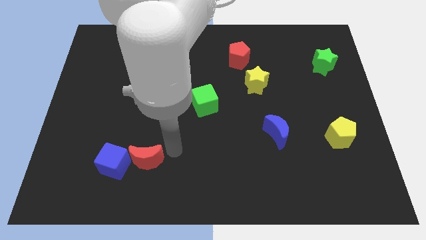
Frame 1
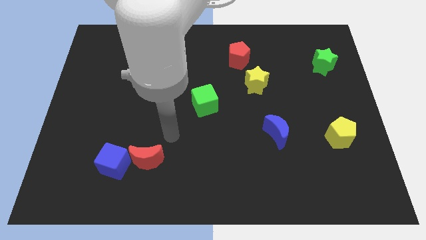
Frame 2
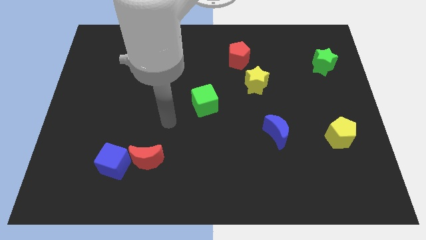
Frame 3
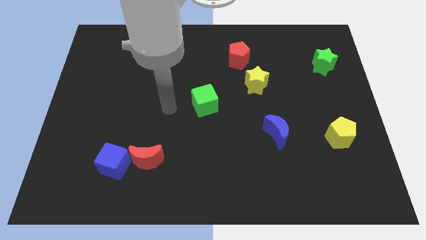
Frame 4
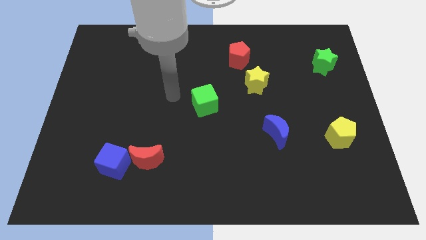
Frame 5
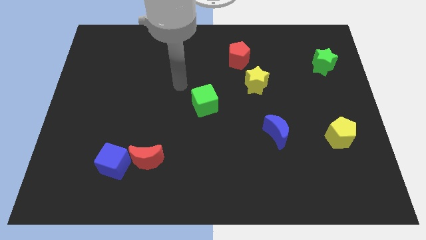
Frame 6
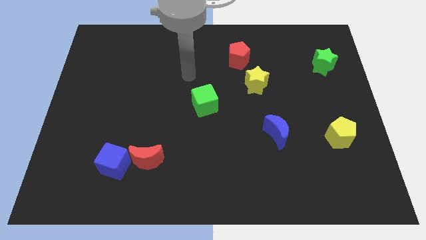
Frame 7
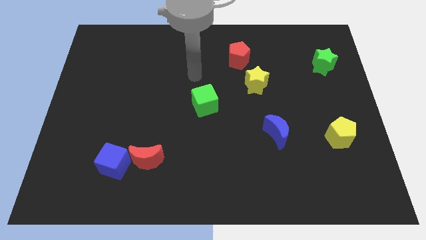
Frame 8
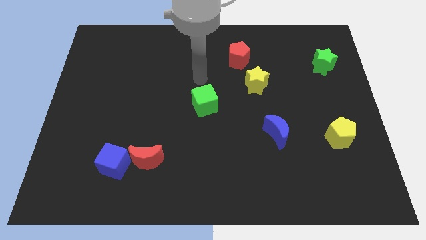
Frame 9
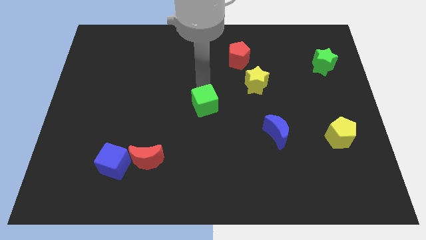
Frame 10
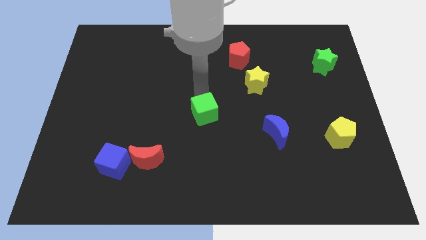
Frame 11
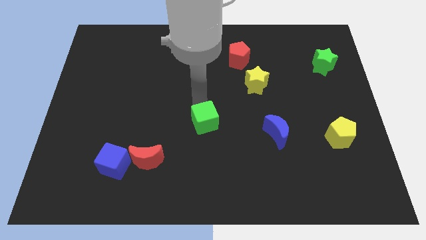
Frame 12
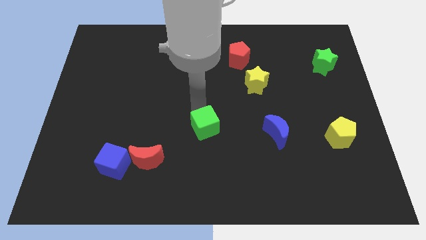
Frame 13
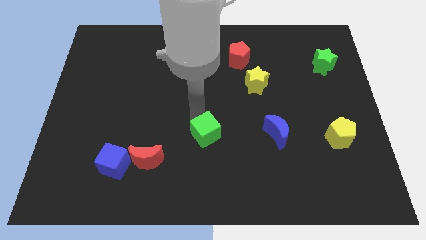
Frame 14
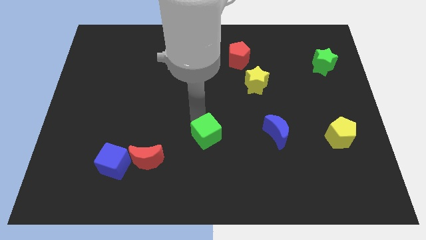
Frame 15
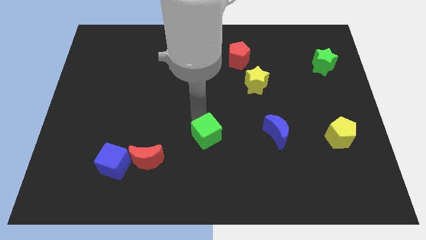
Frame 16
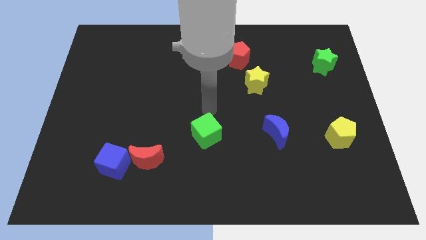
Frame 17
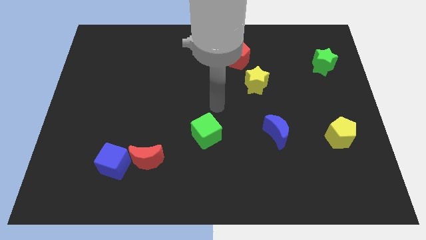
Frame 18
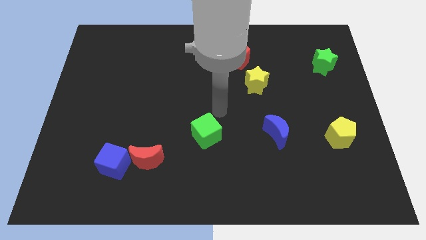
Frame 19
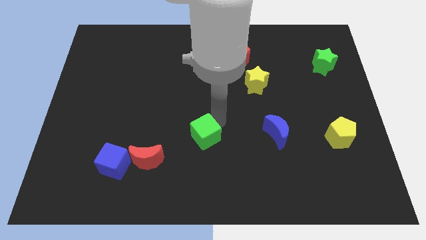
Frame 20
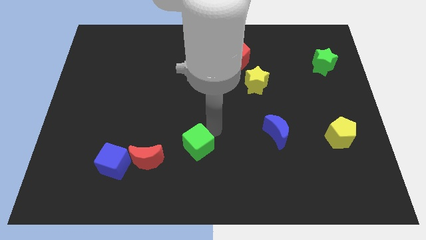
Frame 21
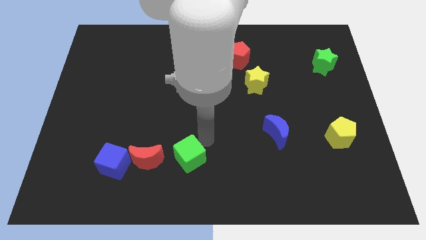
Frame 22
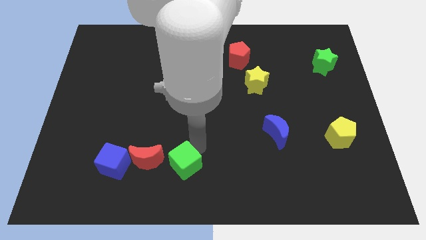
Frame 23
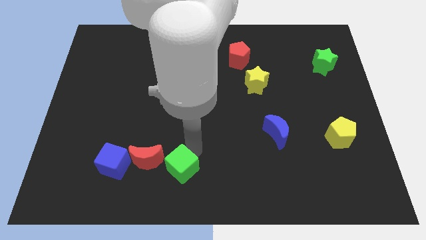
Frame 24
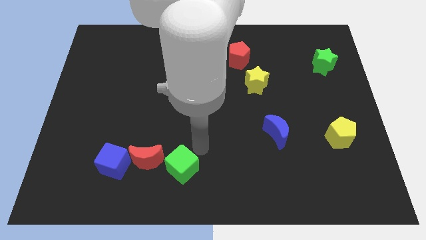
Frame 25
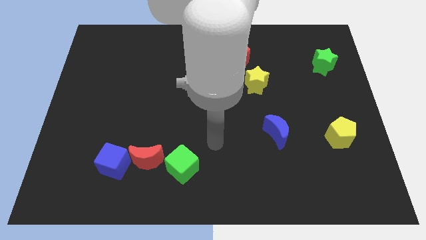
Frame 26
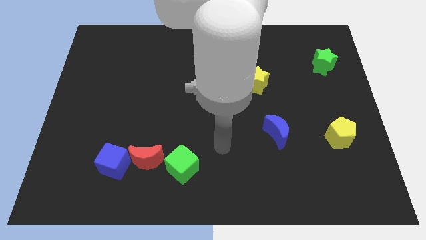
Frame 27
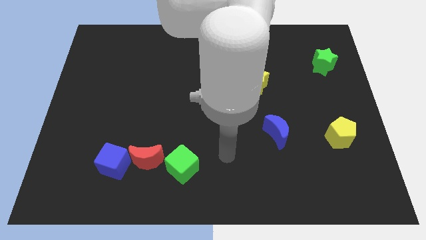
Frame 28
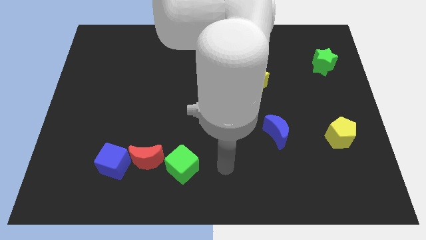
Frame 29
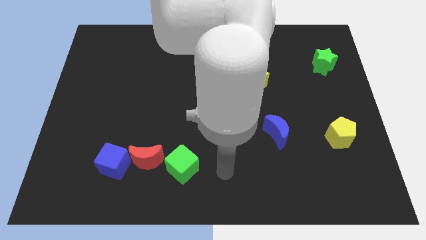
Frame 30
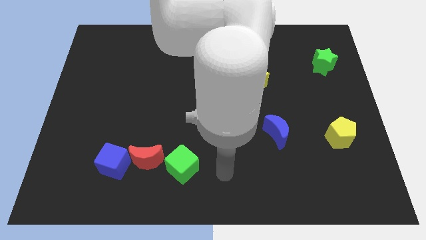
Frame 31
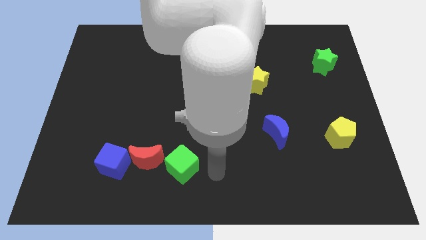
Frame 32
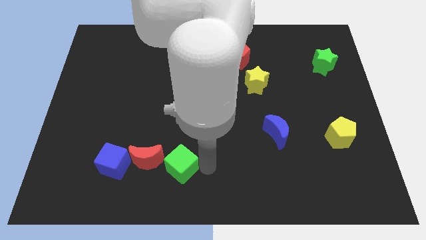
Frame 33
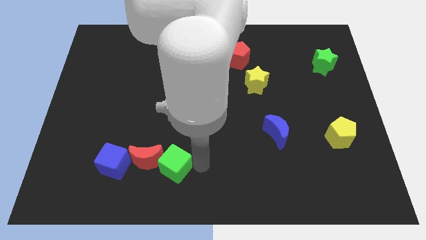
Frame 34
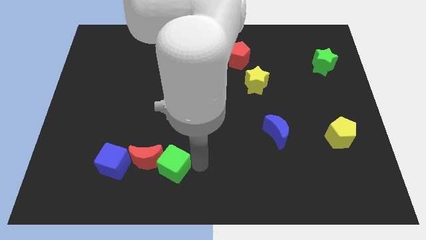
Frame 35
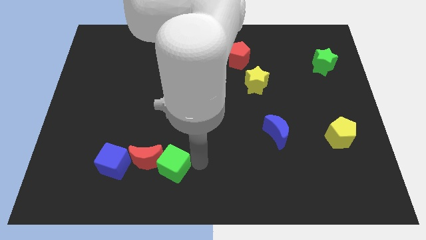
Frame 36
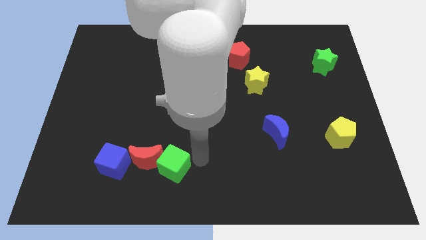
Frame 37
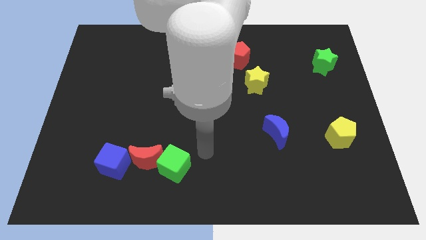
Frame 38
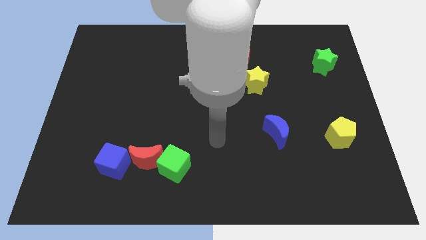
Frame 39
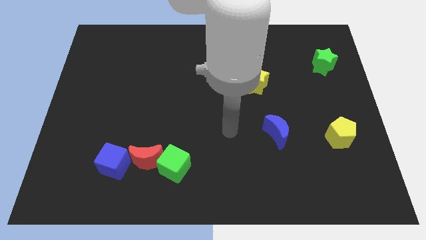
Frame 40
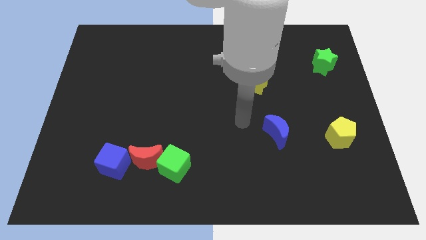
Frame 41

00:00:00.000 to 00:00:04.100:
slide green cube into red moon

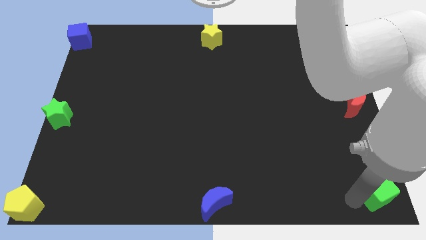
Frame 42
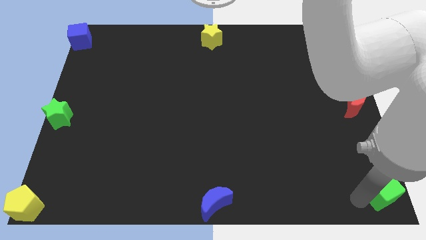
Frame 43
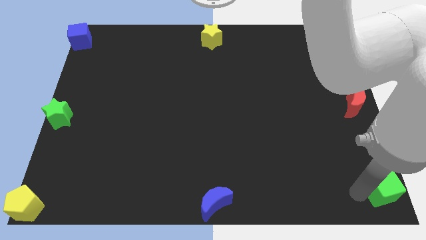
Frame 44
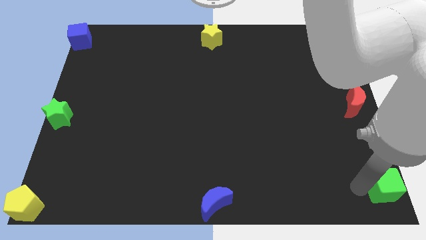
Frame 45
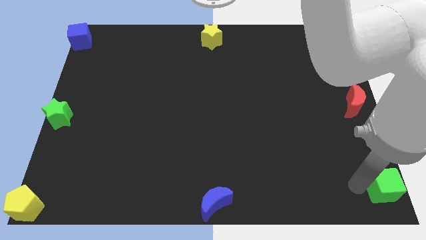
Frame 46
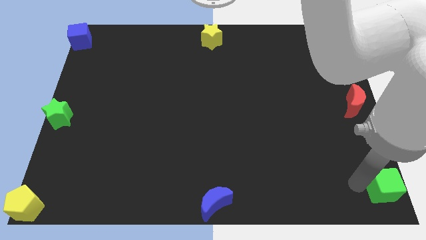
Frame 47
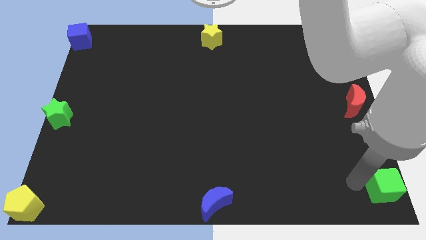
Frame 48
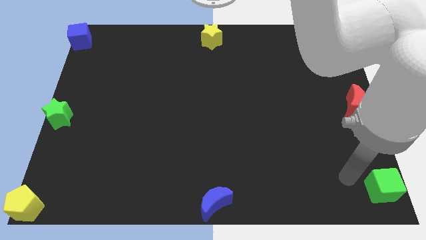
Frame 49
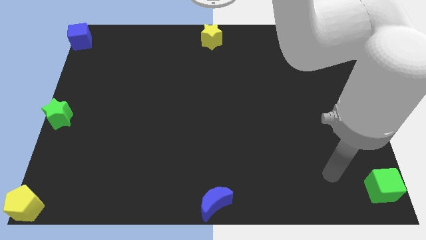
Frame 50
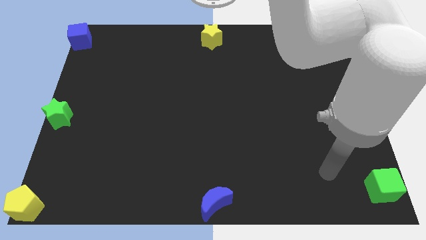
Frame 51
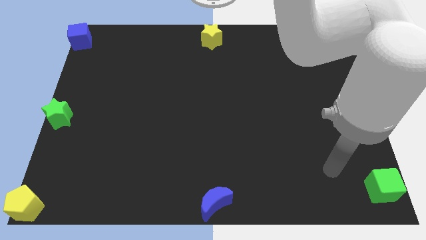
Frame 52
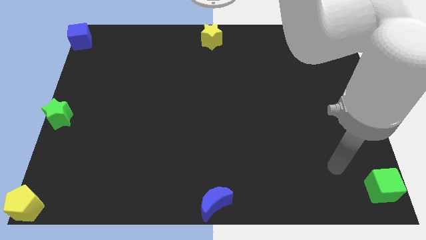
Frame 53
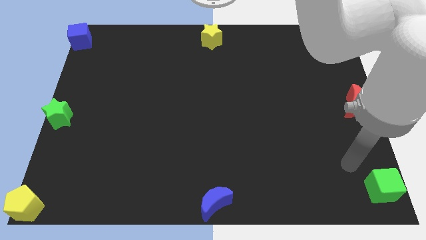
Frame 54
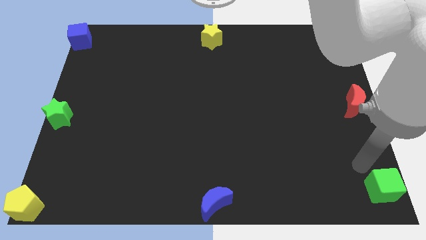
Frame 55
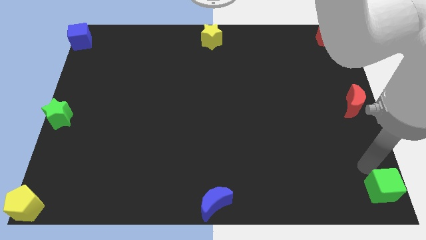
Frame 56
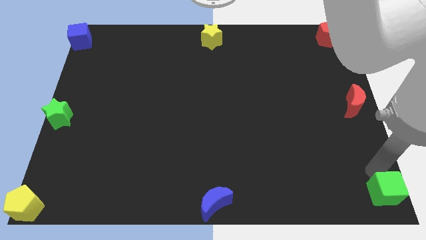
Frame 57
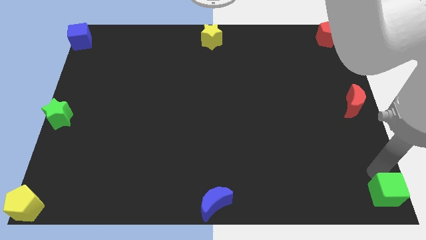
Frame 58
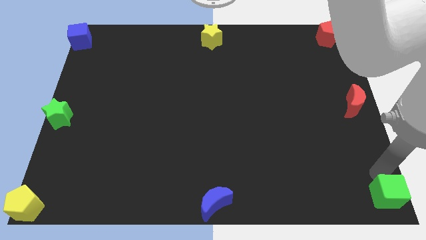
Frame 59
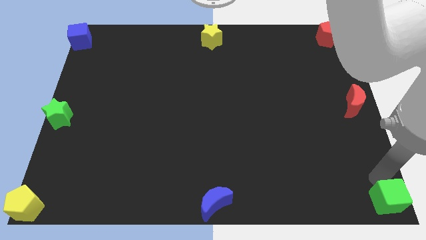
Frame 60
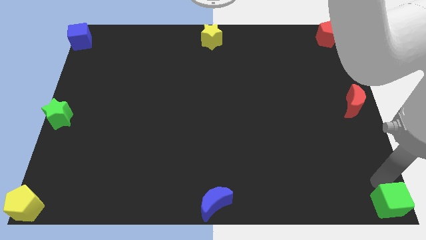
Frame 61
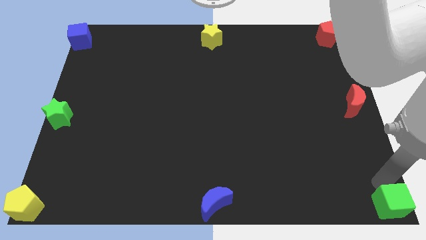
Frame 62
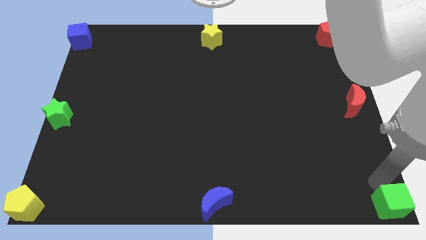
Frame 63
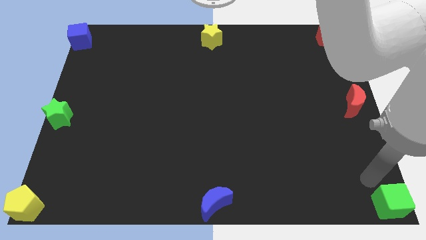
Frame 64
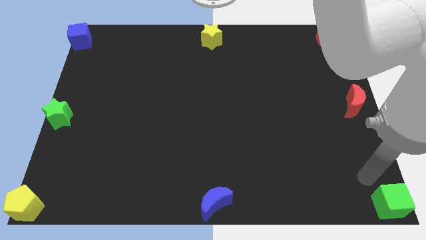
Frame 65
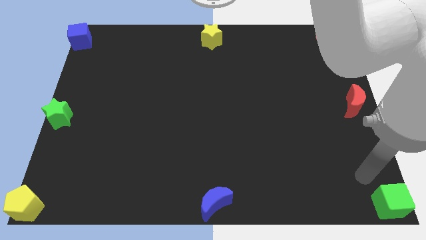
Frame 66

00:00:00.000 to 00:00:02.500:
move the green cube to the bottom right corner of the board

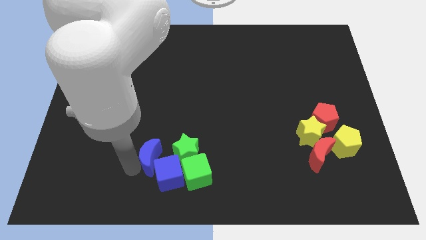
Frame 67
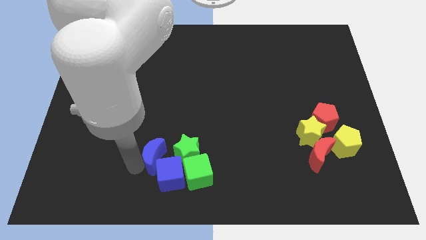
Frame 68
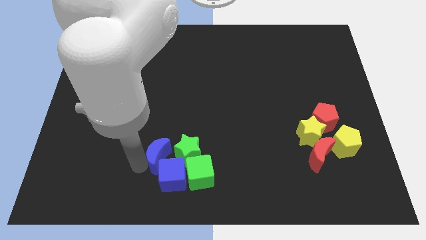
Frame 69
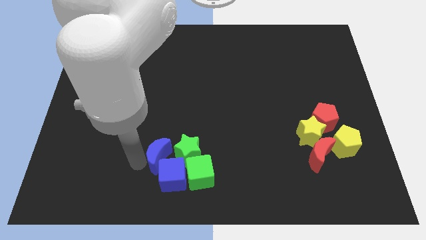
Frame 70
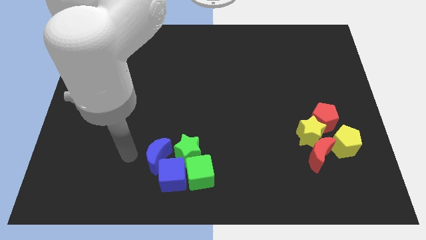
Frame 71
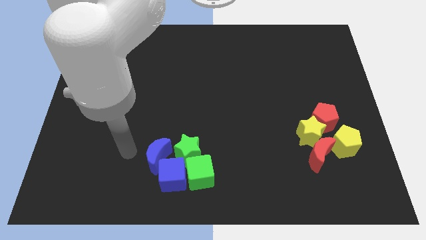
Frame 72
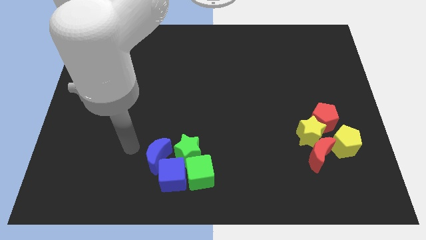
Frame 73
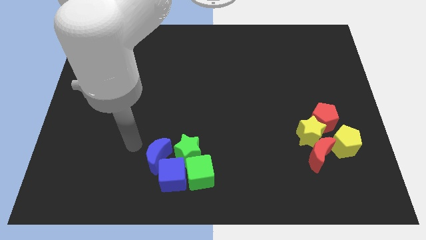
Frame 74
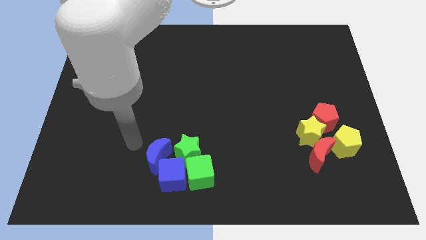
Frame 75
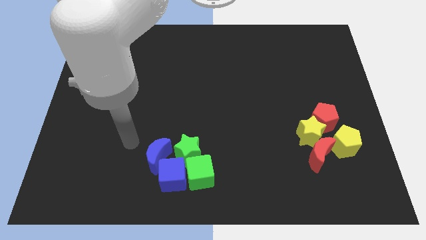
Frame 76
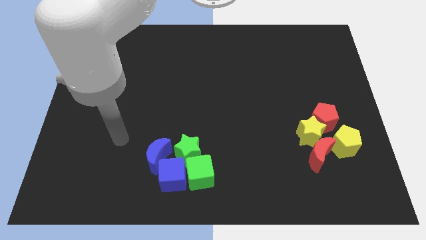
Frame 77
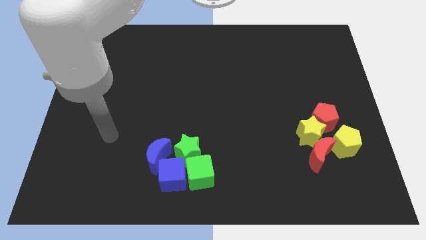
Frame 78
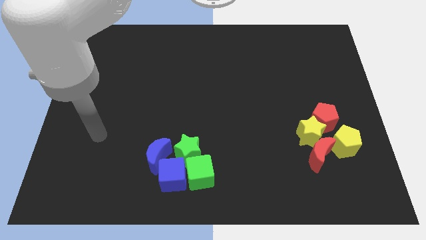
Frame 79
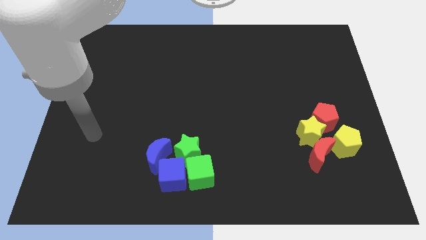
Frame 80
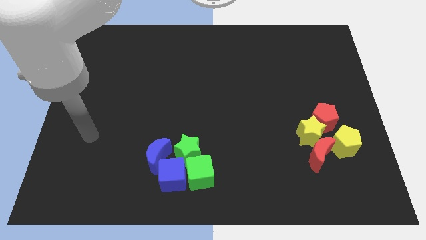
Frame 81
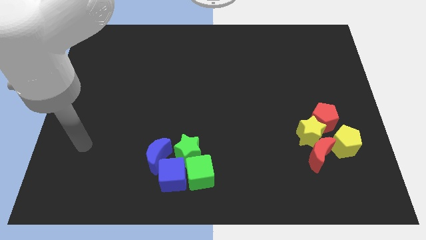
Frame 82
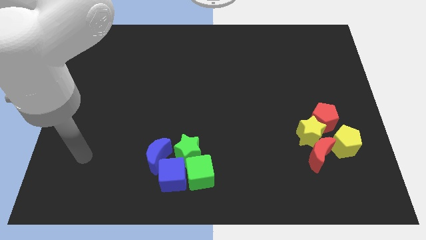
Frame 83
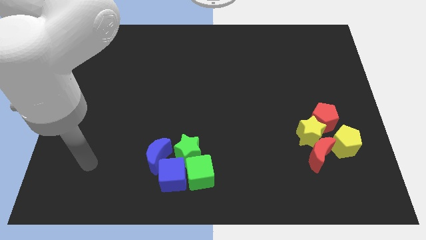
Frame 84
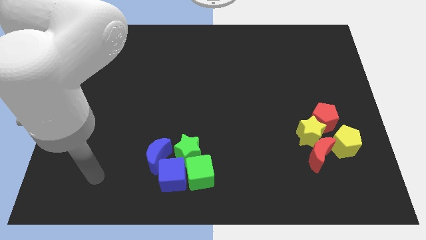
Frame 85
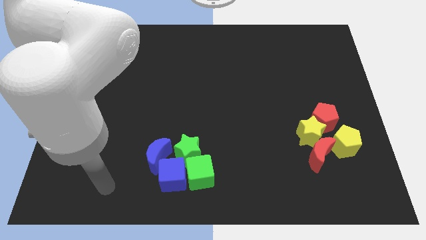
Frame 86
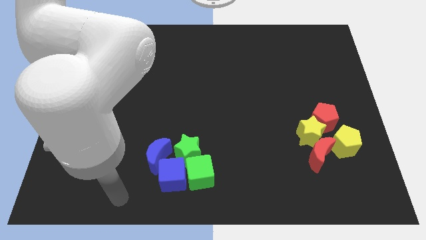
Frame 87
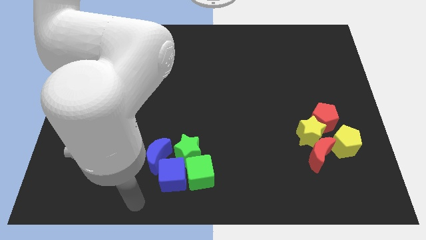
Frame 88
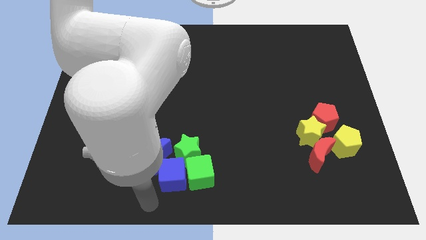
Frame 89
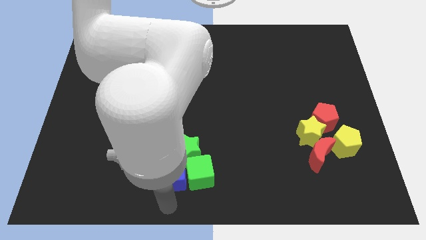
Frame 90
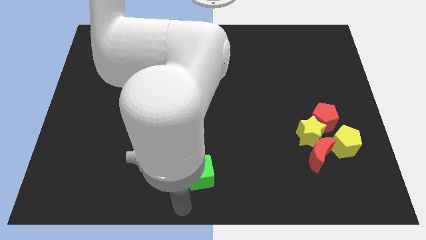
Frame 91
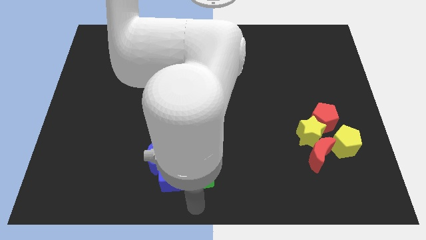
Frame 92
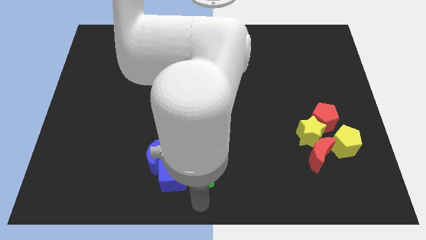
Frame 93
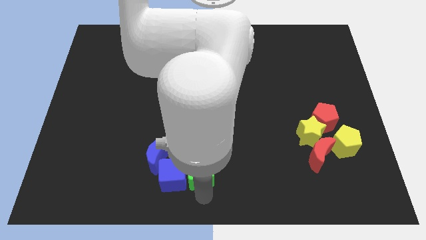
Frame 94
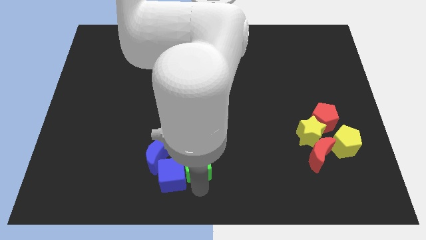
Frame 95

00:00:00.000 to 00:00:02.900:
place the arm down to the green cube
